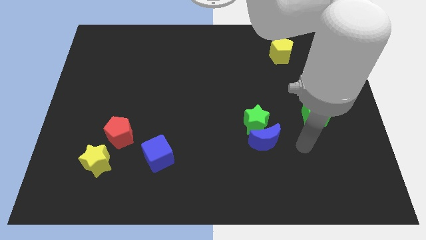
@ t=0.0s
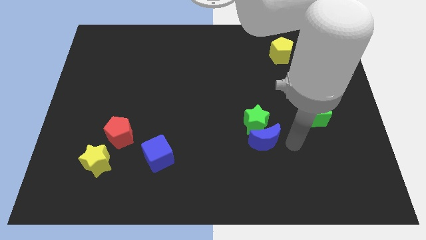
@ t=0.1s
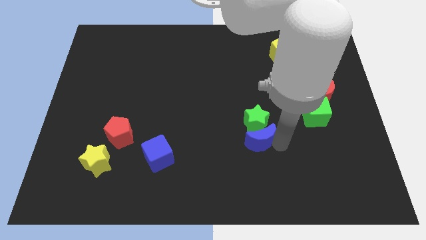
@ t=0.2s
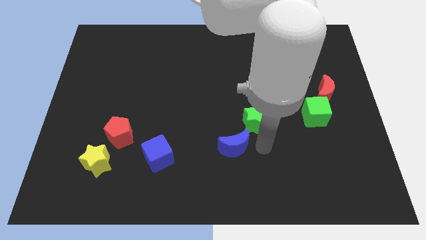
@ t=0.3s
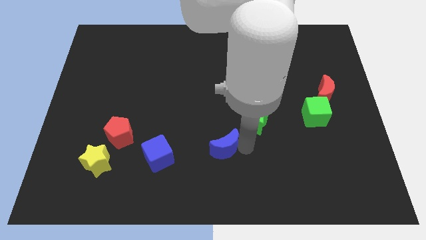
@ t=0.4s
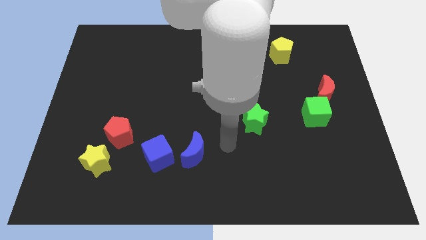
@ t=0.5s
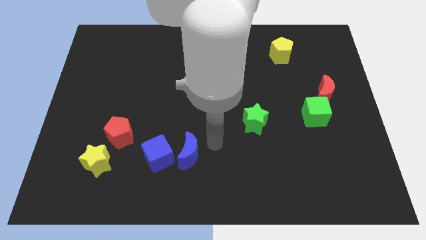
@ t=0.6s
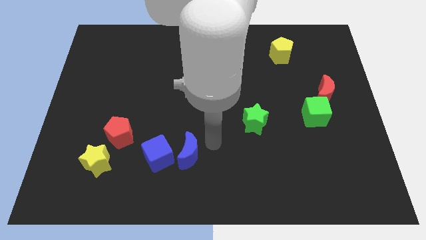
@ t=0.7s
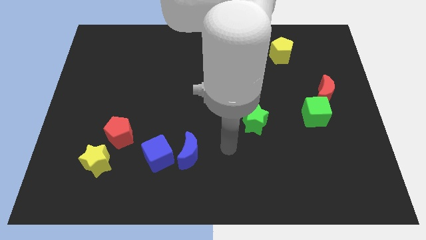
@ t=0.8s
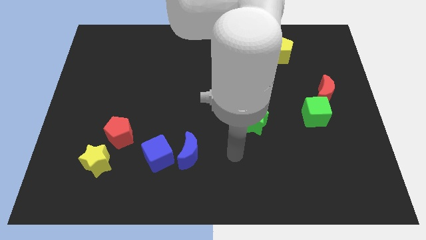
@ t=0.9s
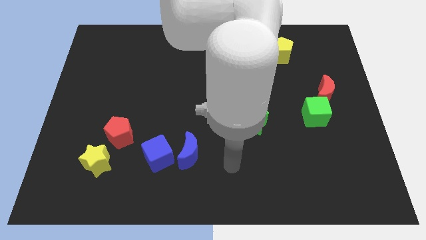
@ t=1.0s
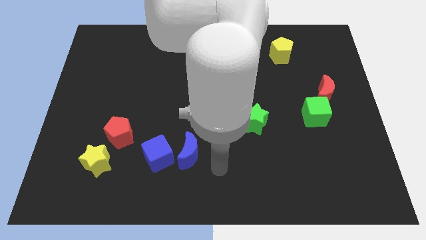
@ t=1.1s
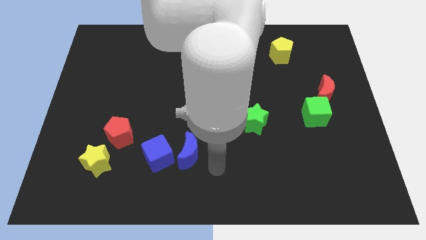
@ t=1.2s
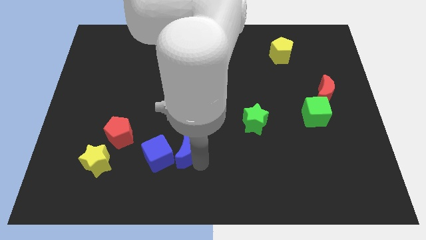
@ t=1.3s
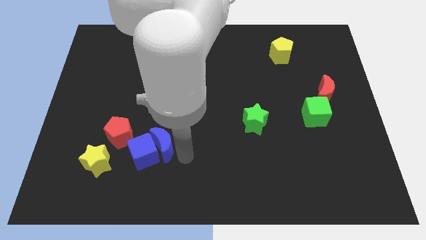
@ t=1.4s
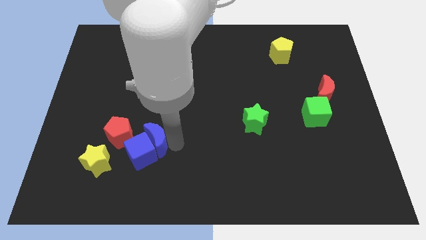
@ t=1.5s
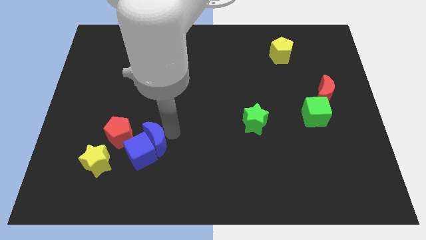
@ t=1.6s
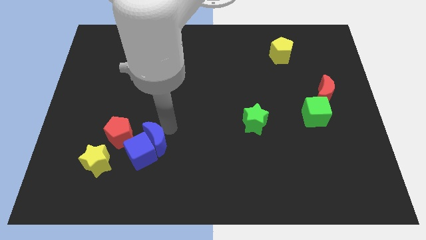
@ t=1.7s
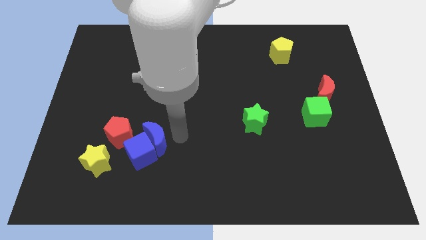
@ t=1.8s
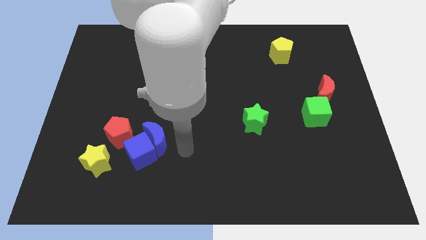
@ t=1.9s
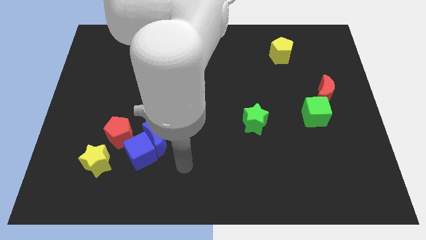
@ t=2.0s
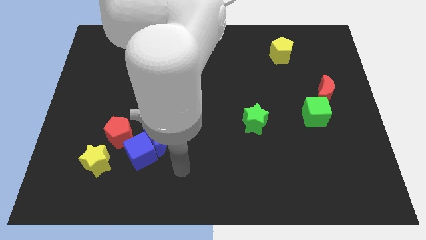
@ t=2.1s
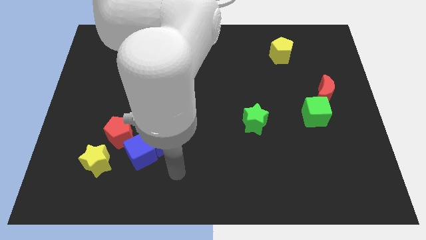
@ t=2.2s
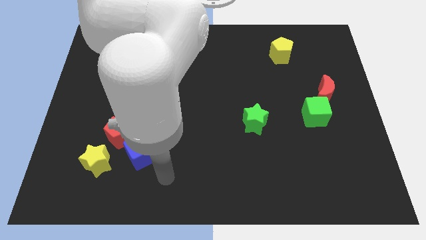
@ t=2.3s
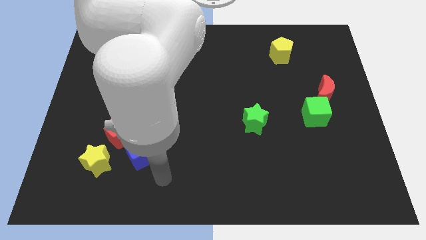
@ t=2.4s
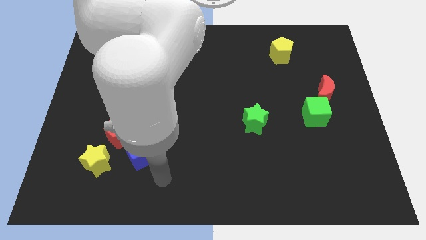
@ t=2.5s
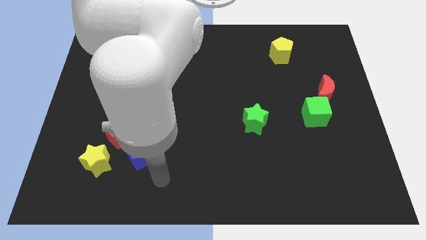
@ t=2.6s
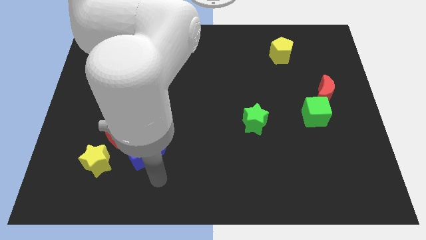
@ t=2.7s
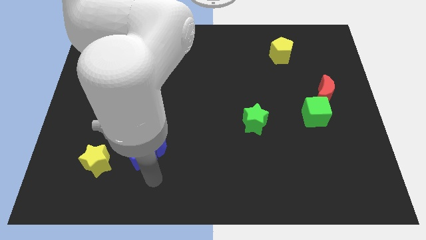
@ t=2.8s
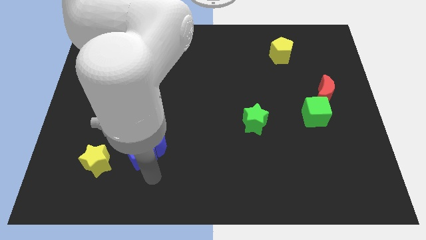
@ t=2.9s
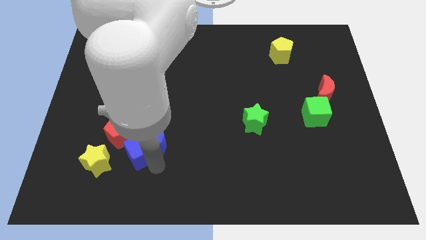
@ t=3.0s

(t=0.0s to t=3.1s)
push the blue moon into the blue cube

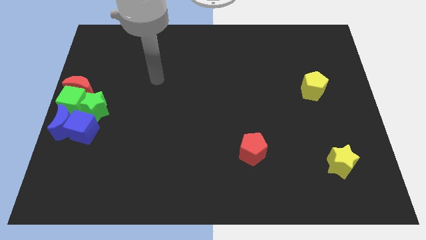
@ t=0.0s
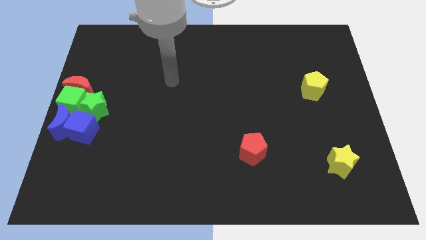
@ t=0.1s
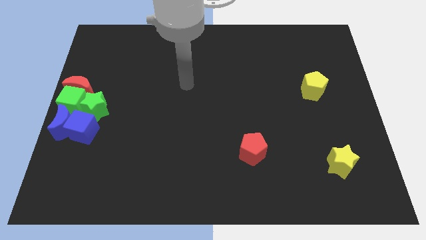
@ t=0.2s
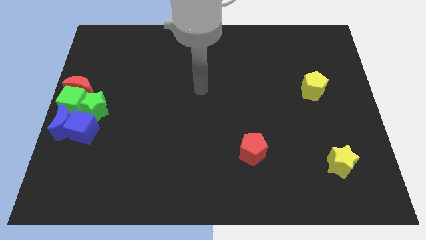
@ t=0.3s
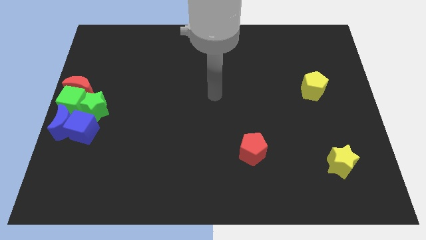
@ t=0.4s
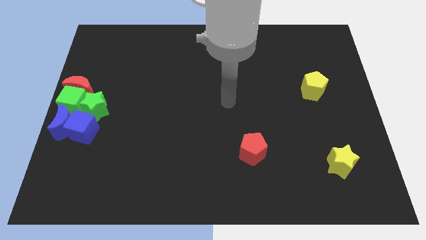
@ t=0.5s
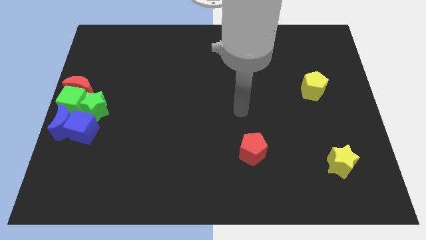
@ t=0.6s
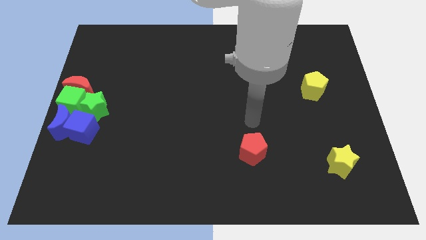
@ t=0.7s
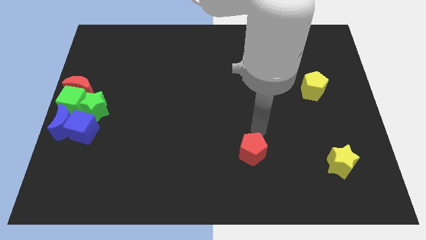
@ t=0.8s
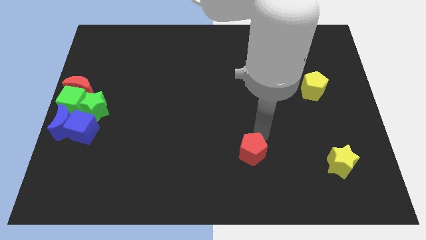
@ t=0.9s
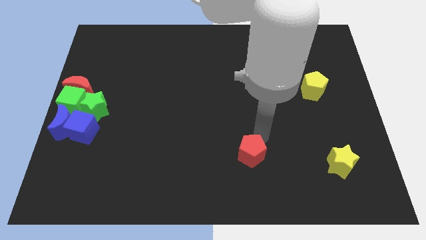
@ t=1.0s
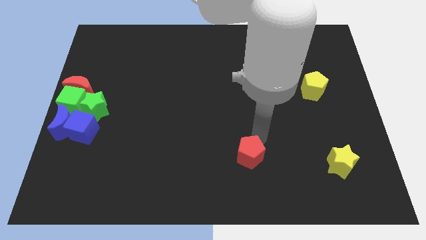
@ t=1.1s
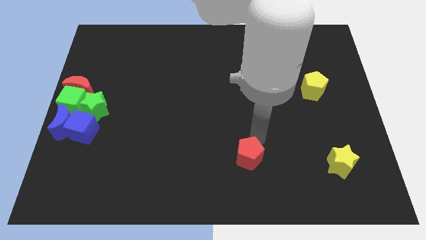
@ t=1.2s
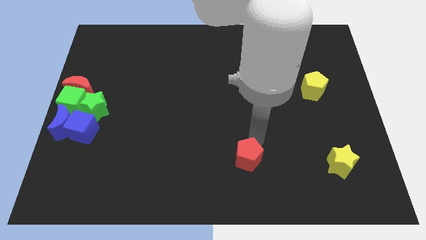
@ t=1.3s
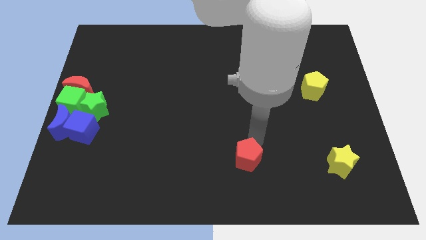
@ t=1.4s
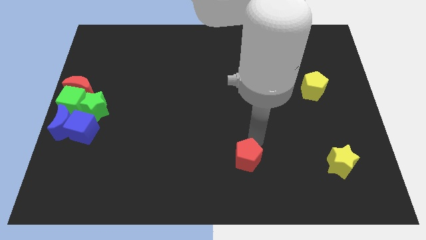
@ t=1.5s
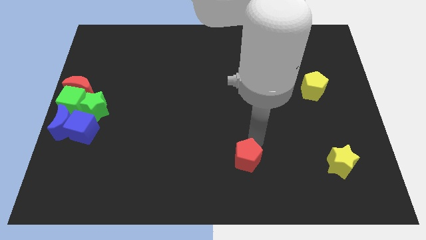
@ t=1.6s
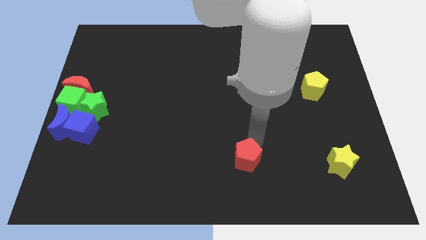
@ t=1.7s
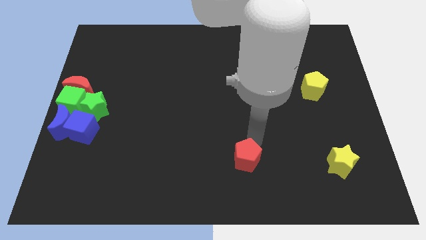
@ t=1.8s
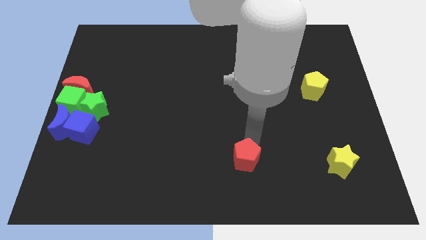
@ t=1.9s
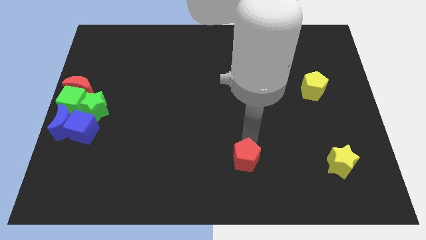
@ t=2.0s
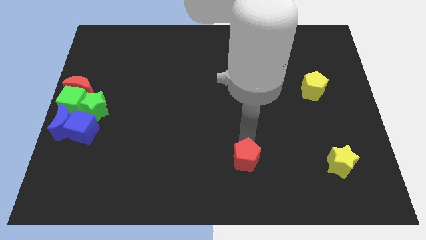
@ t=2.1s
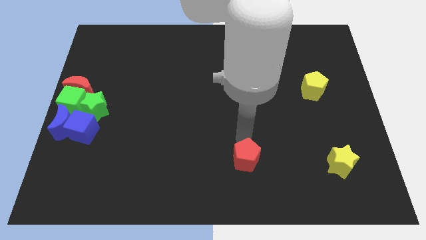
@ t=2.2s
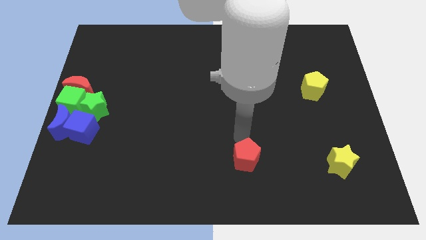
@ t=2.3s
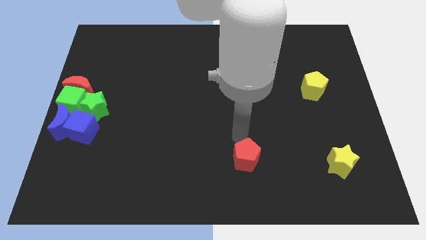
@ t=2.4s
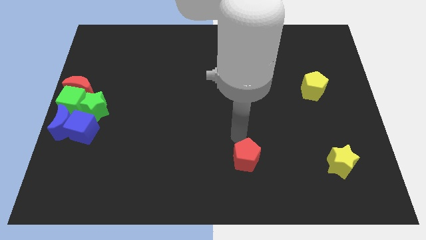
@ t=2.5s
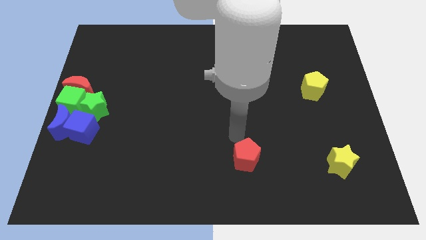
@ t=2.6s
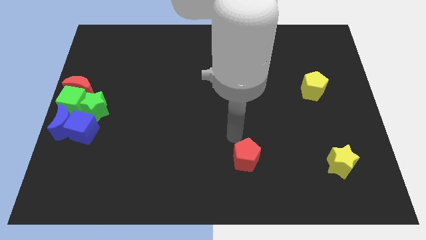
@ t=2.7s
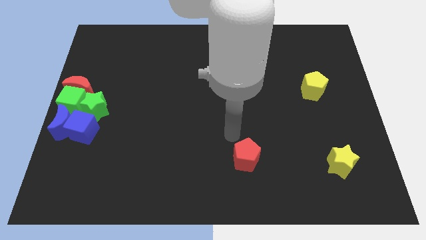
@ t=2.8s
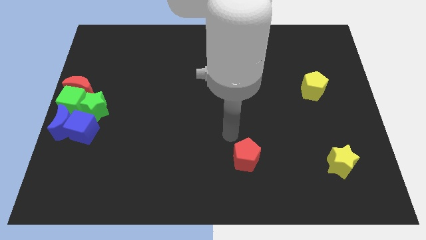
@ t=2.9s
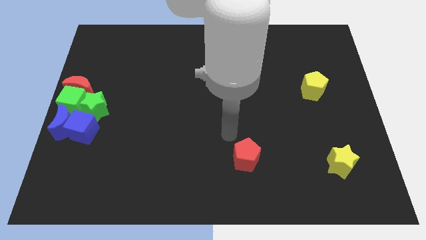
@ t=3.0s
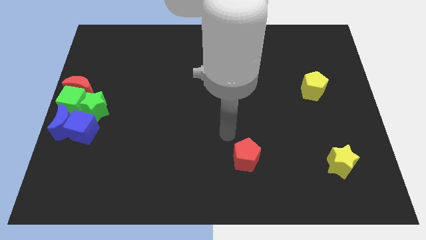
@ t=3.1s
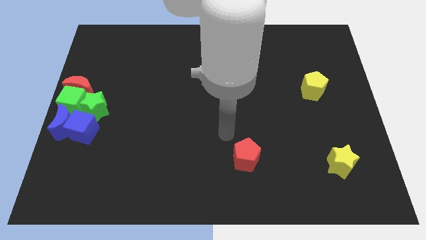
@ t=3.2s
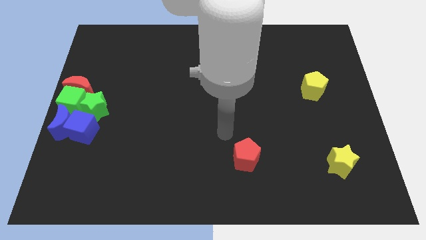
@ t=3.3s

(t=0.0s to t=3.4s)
slightly touch the red pentagon at the top

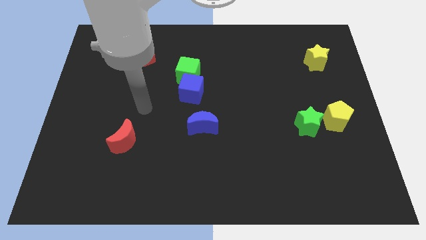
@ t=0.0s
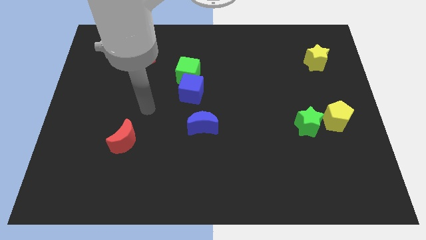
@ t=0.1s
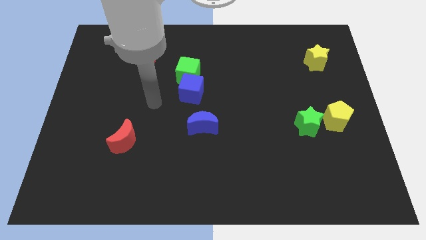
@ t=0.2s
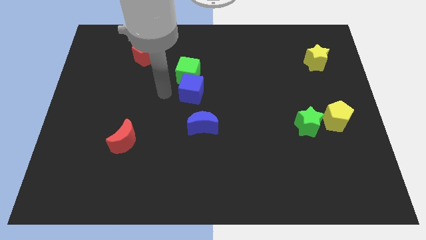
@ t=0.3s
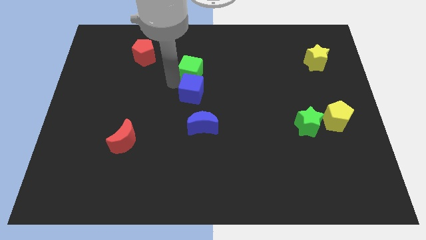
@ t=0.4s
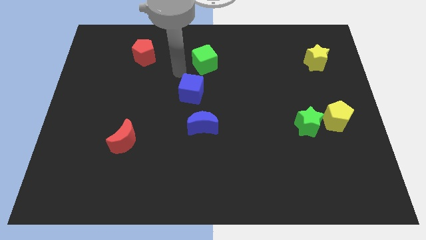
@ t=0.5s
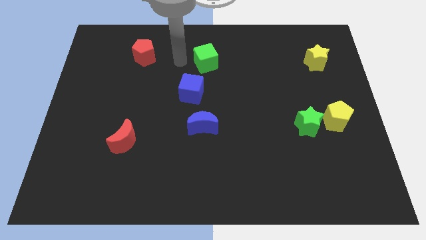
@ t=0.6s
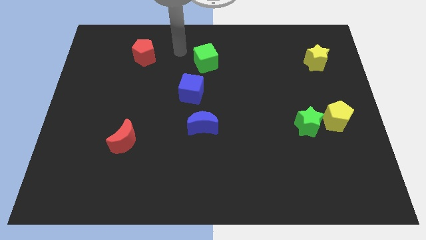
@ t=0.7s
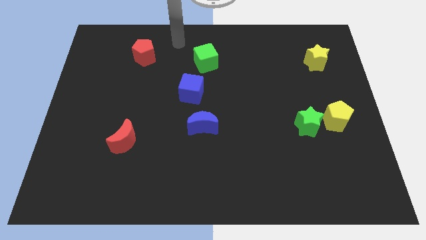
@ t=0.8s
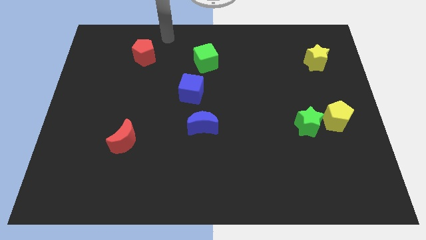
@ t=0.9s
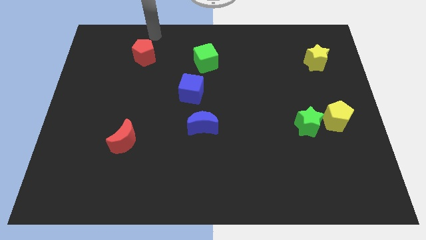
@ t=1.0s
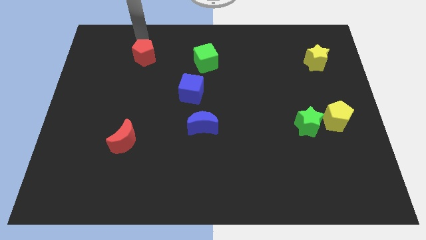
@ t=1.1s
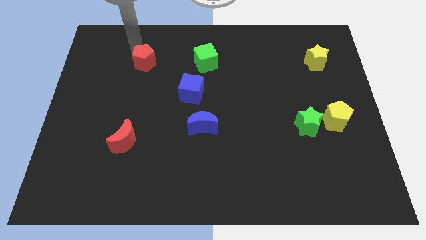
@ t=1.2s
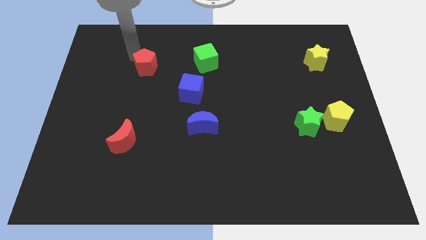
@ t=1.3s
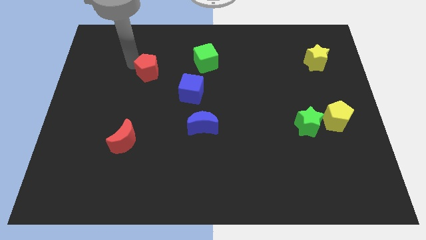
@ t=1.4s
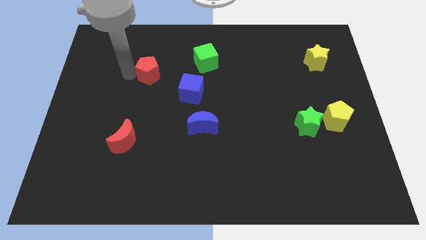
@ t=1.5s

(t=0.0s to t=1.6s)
push the green cube to the left of the yellow star

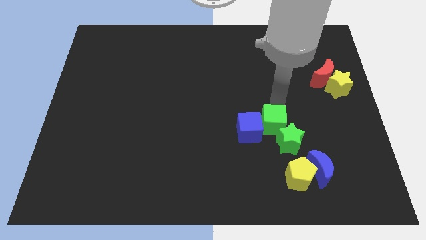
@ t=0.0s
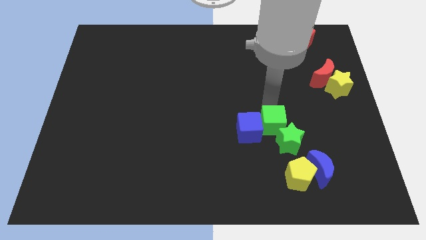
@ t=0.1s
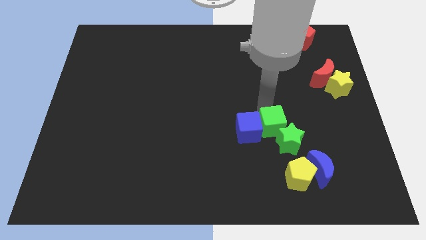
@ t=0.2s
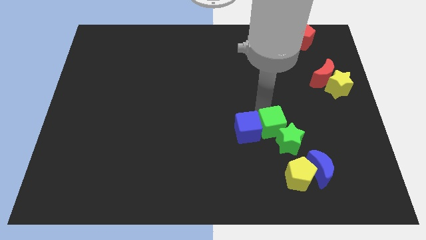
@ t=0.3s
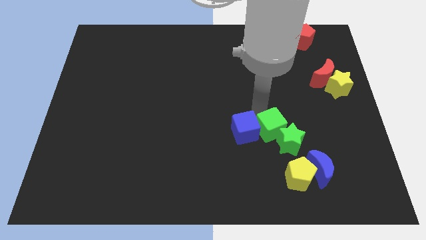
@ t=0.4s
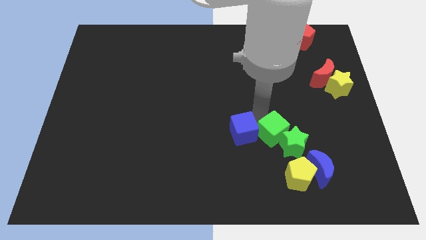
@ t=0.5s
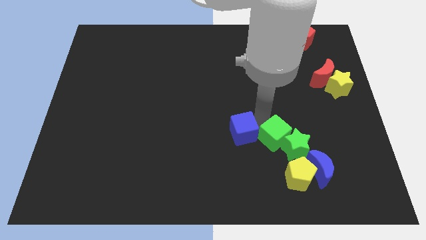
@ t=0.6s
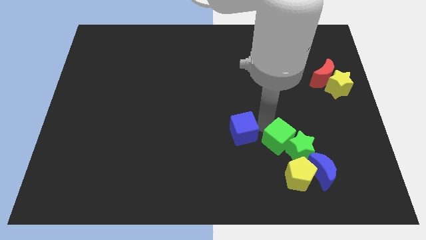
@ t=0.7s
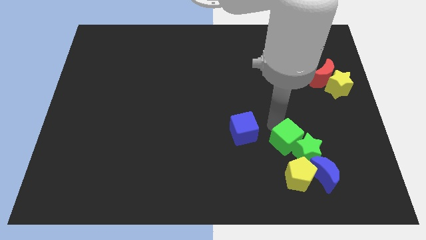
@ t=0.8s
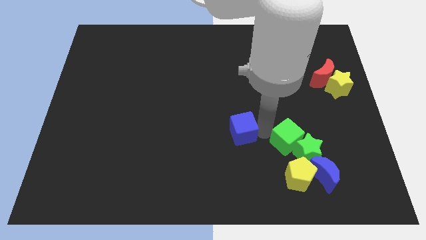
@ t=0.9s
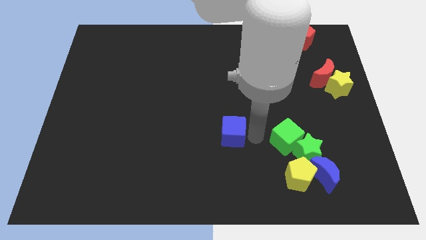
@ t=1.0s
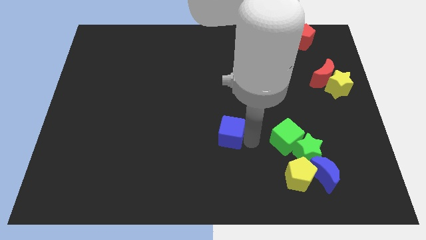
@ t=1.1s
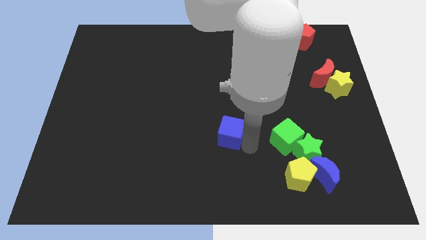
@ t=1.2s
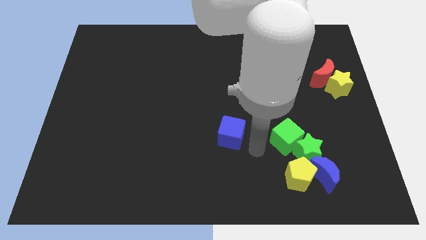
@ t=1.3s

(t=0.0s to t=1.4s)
separate the blue cube and the green cube
